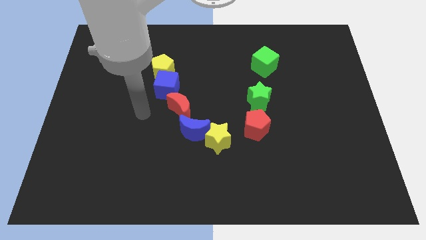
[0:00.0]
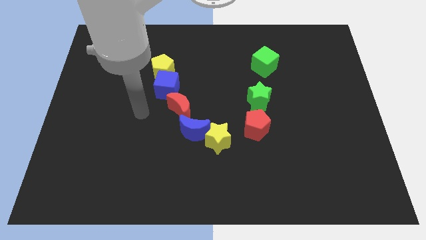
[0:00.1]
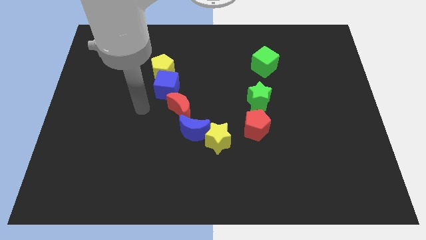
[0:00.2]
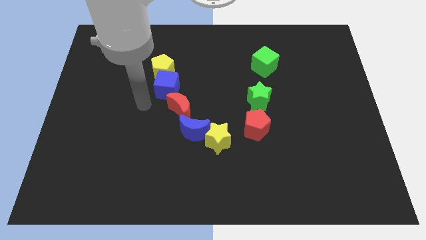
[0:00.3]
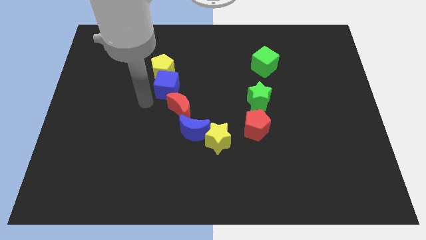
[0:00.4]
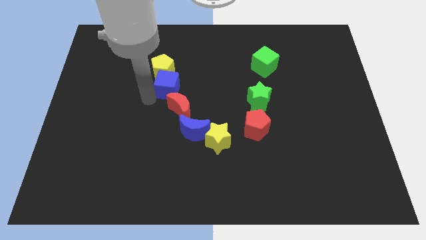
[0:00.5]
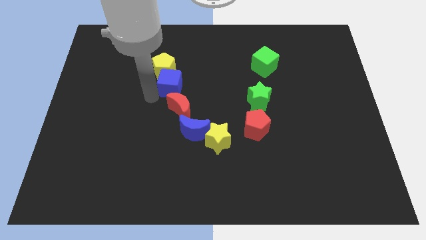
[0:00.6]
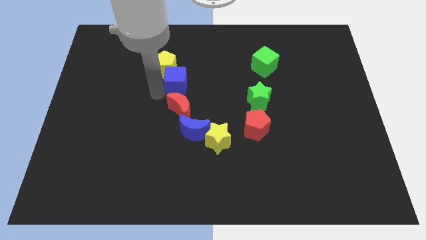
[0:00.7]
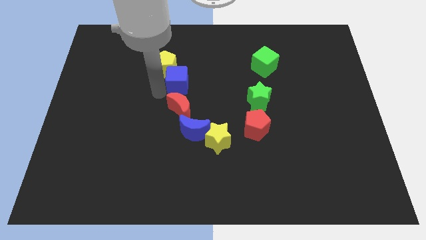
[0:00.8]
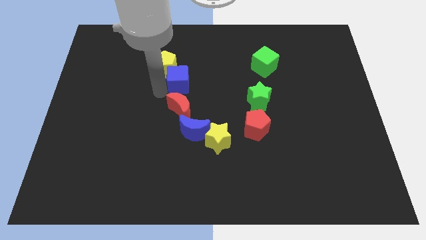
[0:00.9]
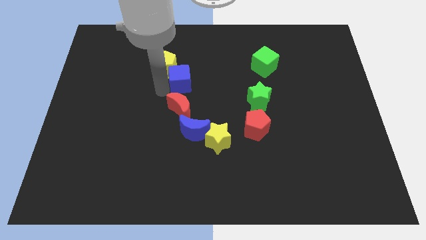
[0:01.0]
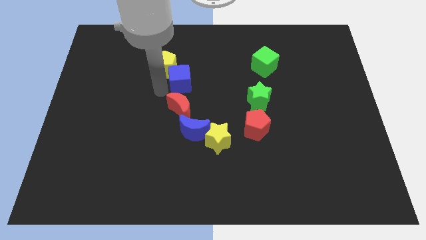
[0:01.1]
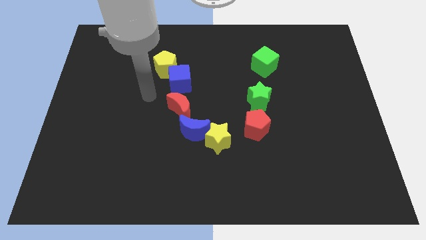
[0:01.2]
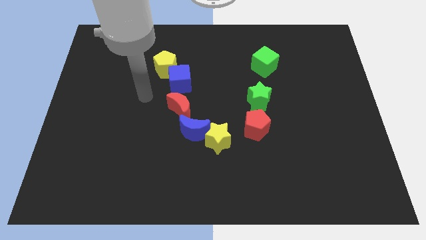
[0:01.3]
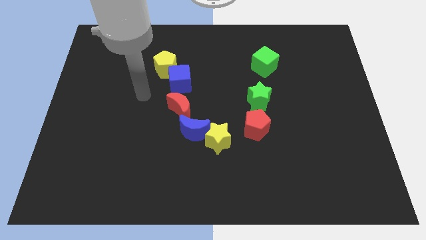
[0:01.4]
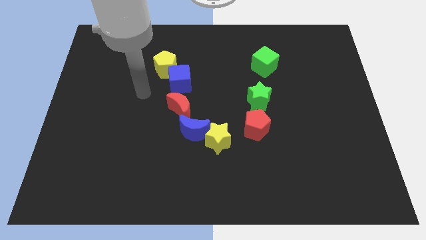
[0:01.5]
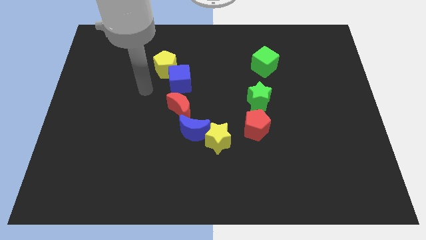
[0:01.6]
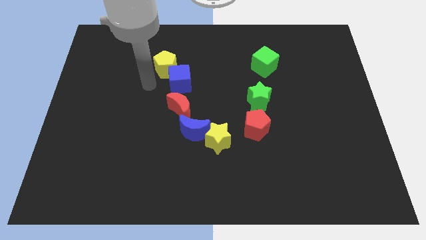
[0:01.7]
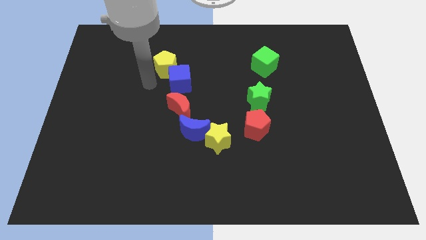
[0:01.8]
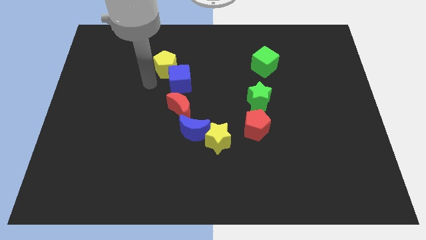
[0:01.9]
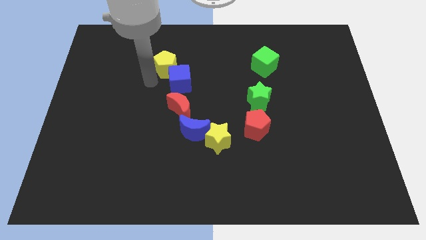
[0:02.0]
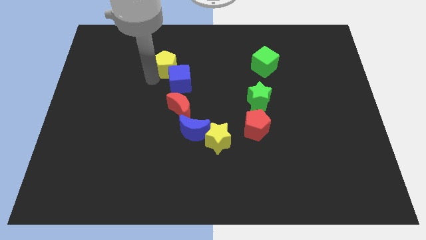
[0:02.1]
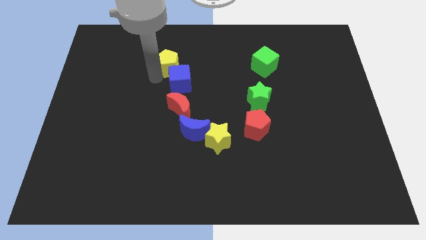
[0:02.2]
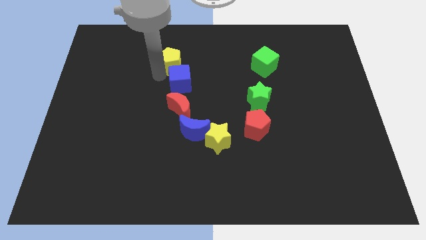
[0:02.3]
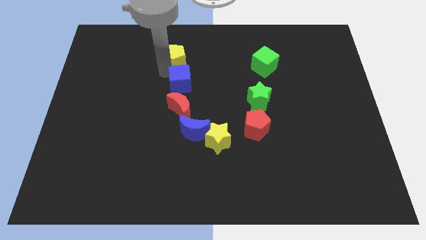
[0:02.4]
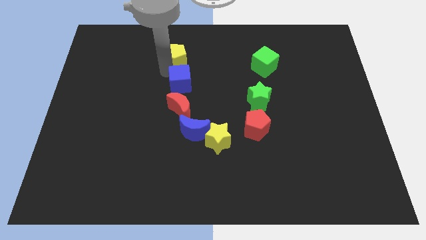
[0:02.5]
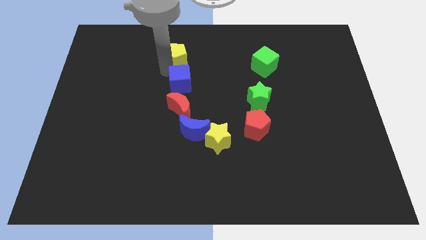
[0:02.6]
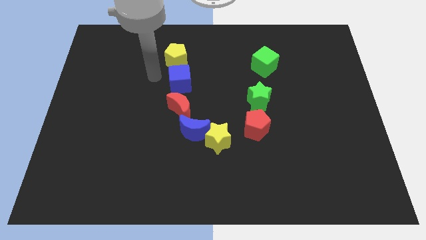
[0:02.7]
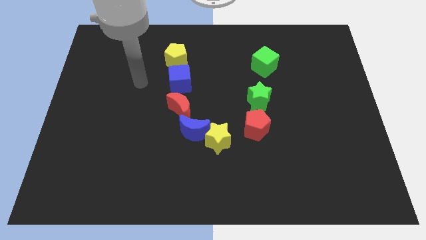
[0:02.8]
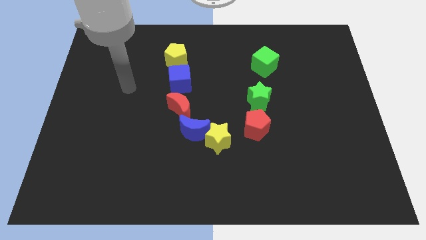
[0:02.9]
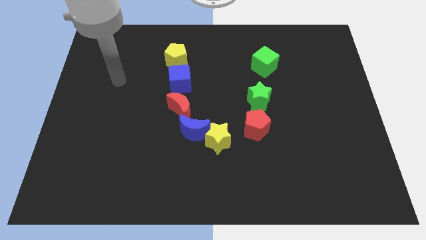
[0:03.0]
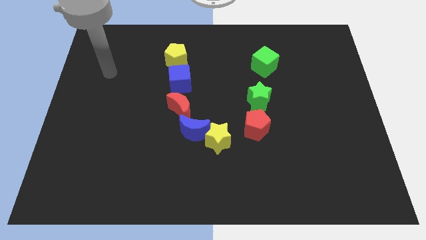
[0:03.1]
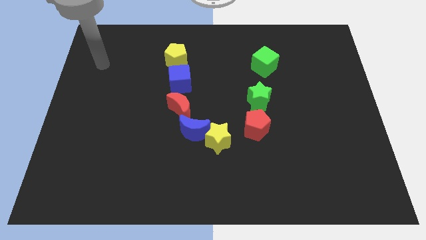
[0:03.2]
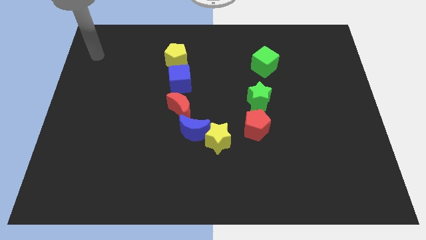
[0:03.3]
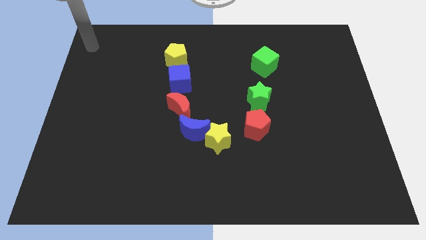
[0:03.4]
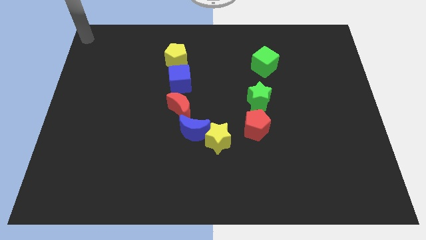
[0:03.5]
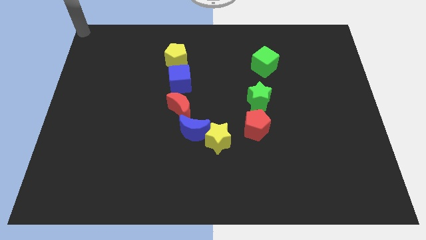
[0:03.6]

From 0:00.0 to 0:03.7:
place the yellow pentagon above the blue cube

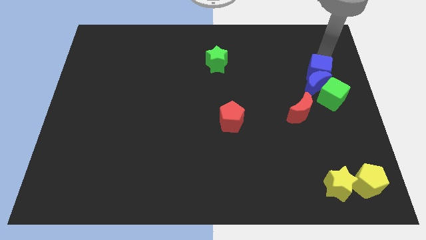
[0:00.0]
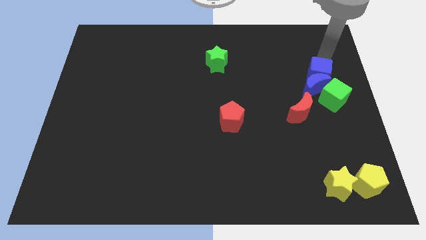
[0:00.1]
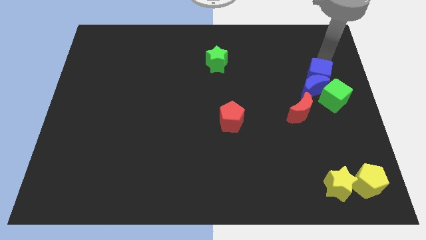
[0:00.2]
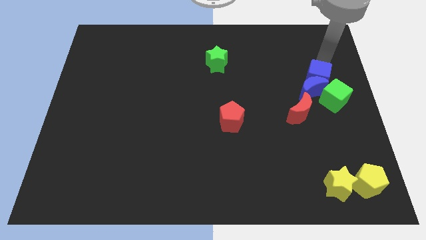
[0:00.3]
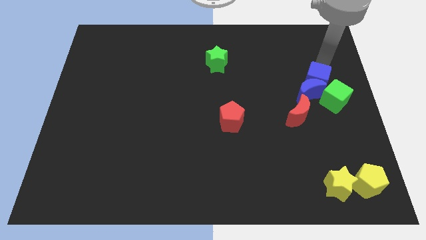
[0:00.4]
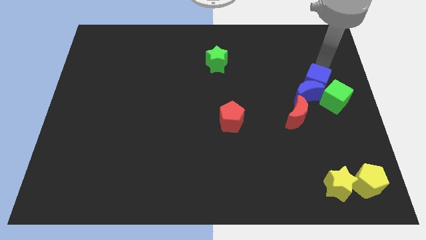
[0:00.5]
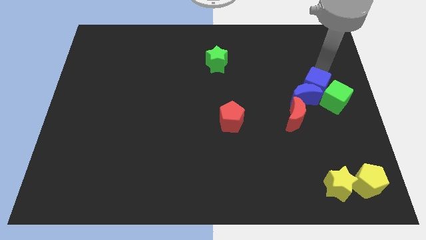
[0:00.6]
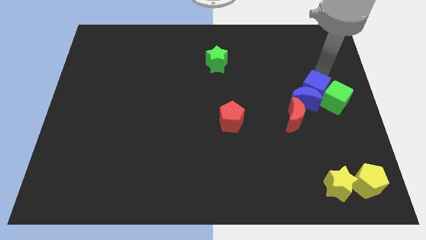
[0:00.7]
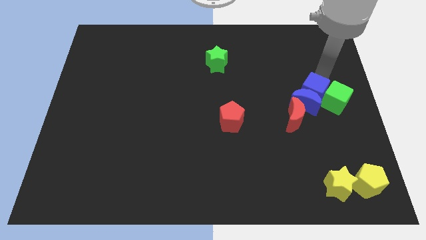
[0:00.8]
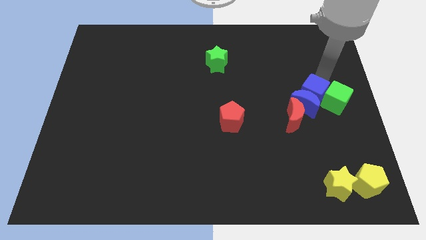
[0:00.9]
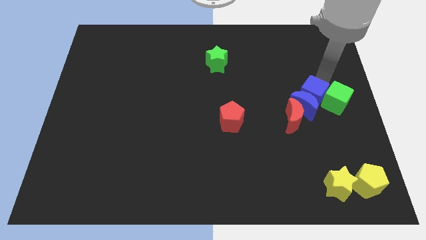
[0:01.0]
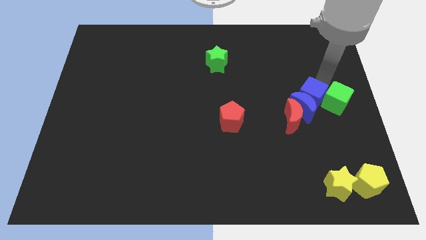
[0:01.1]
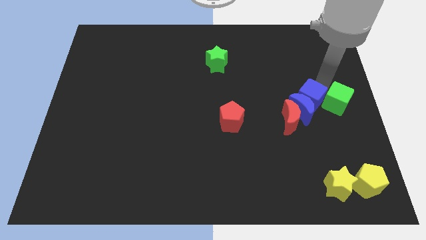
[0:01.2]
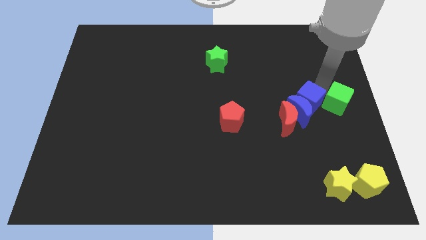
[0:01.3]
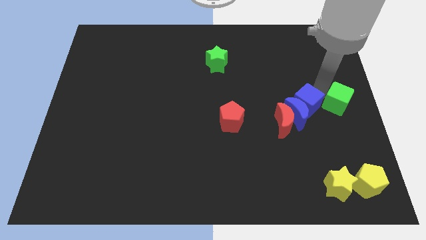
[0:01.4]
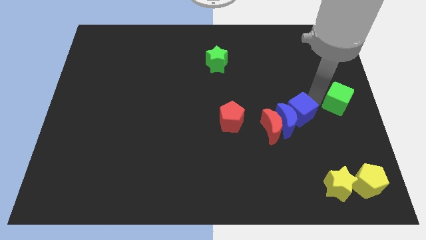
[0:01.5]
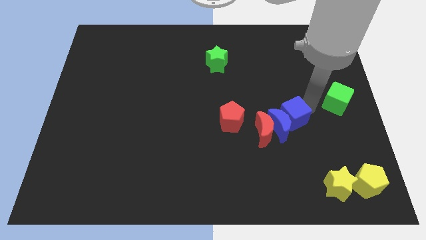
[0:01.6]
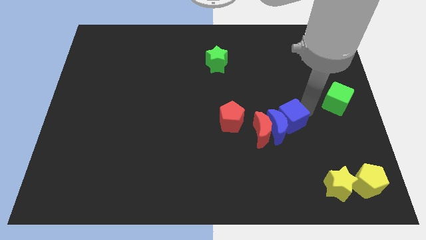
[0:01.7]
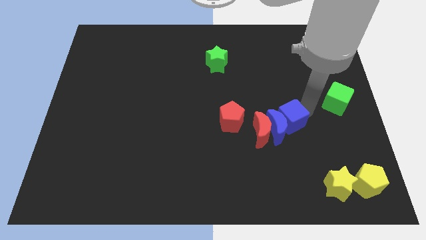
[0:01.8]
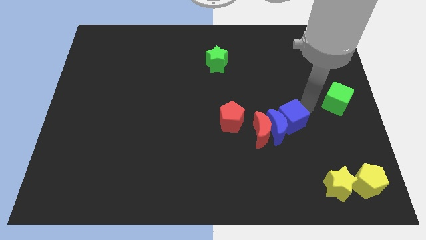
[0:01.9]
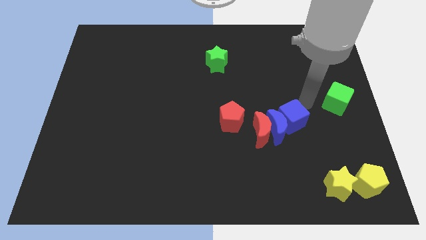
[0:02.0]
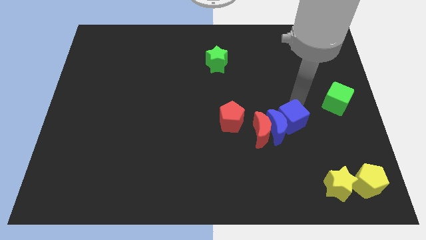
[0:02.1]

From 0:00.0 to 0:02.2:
push the blue cube into the blue moon to the center

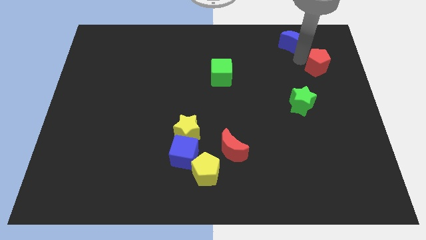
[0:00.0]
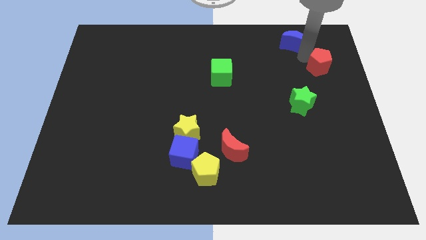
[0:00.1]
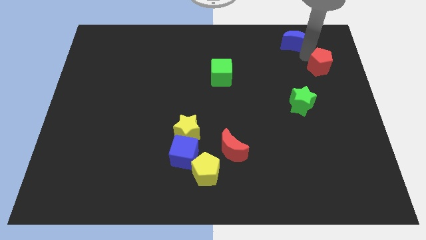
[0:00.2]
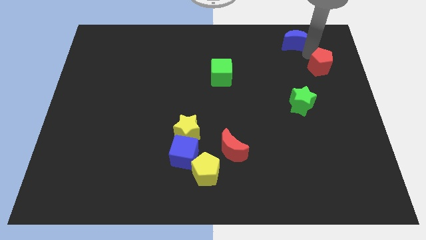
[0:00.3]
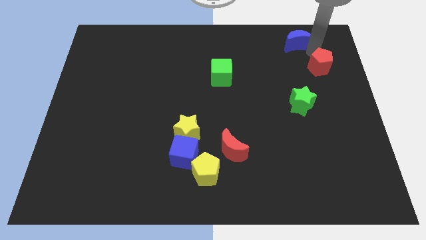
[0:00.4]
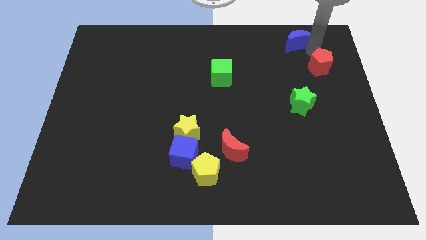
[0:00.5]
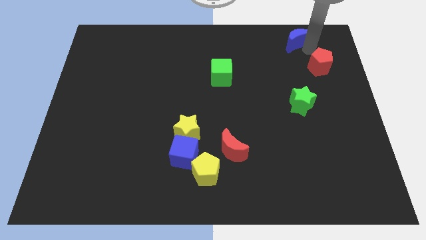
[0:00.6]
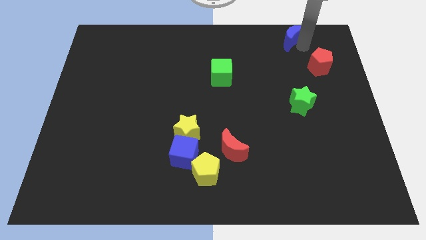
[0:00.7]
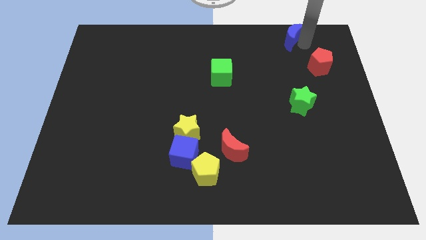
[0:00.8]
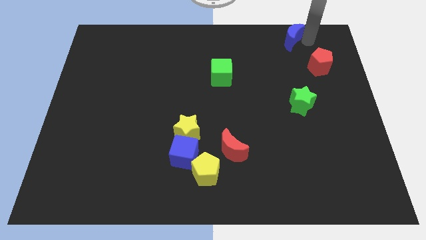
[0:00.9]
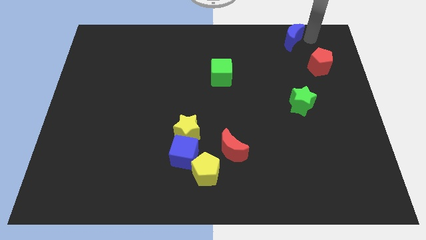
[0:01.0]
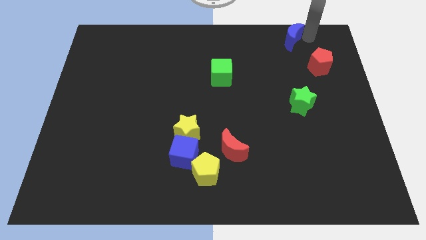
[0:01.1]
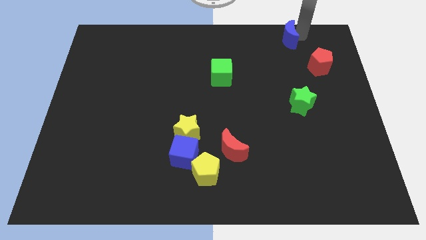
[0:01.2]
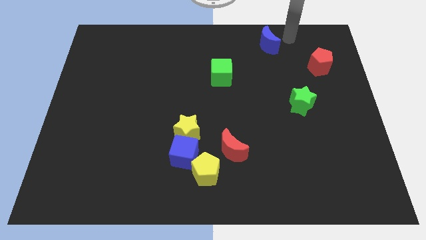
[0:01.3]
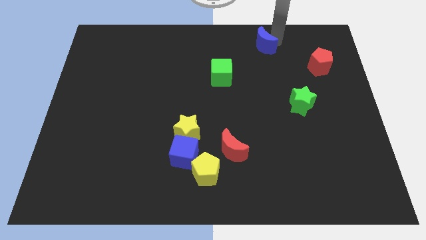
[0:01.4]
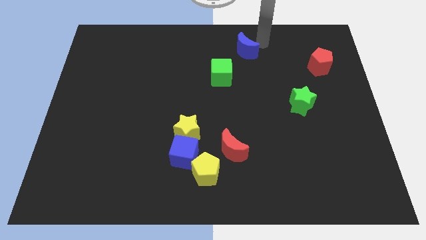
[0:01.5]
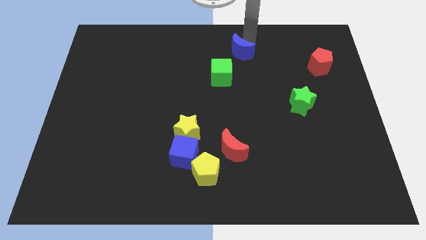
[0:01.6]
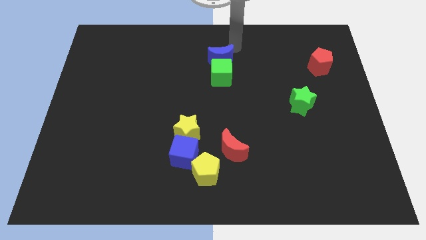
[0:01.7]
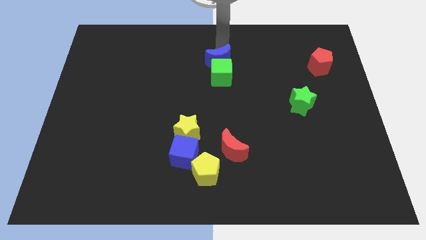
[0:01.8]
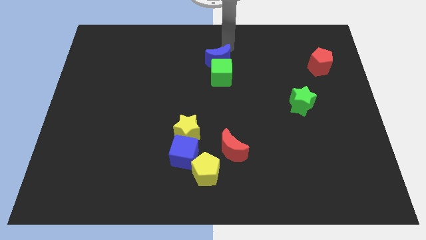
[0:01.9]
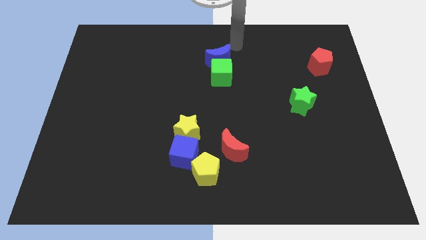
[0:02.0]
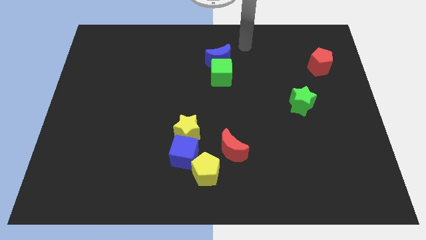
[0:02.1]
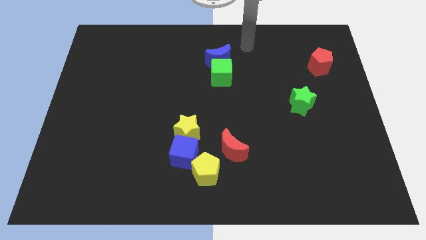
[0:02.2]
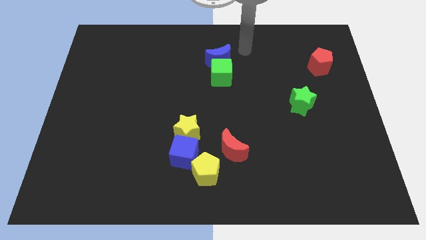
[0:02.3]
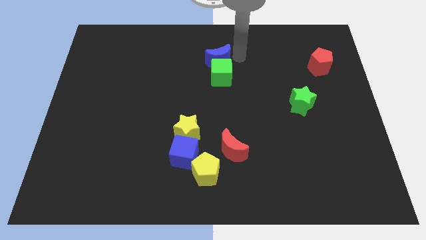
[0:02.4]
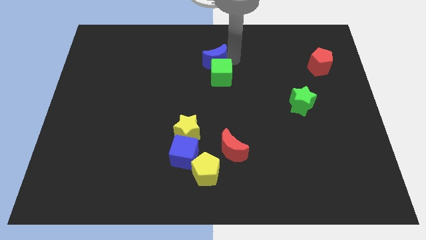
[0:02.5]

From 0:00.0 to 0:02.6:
push blue crescent above green cube

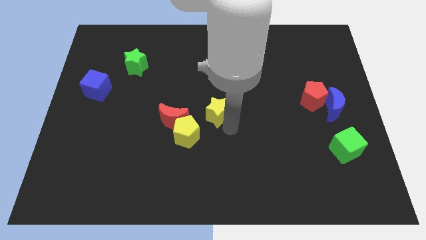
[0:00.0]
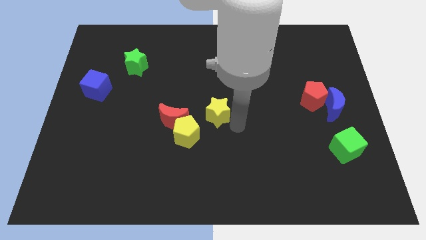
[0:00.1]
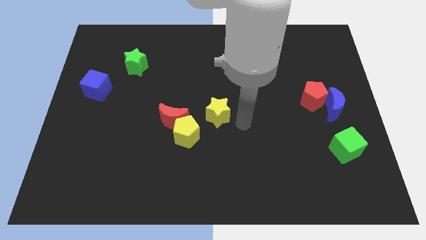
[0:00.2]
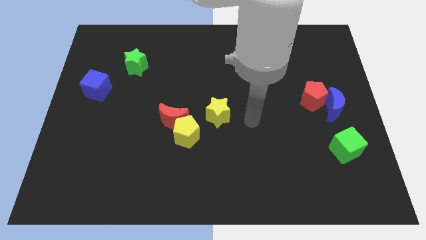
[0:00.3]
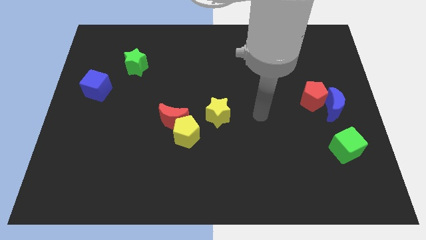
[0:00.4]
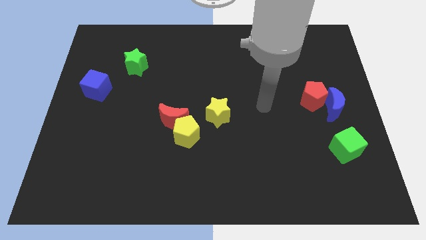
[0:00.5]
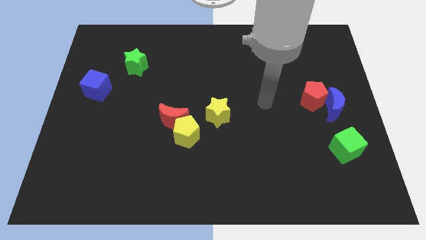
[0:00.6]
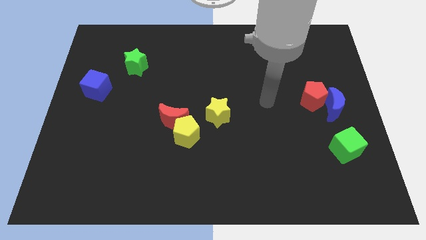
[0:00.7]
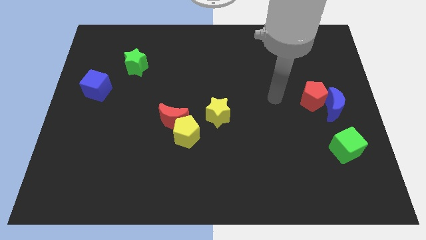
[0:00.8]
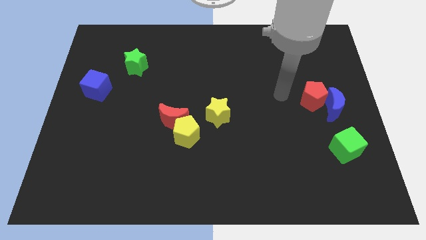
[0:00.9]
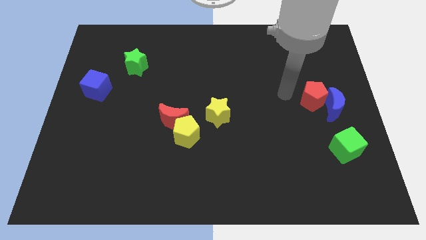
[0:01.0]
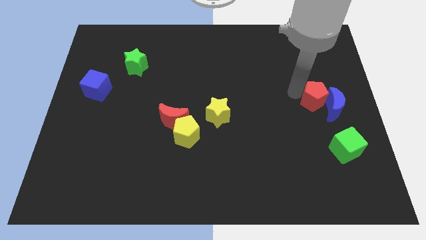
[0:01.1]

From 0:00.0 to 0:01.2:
place the arm in between yellow star red pentagon
